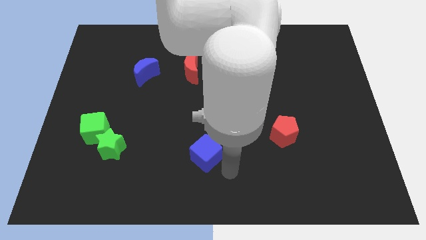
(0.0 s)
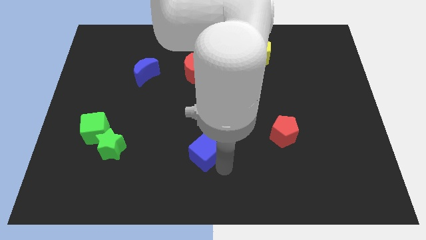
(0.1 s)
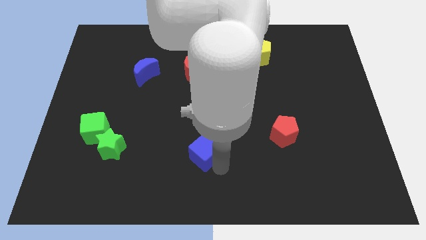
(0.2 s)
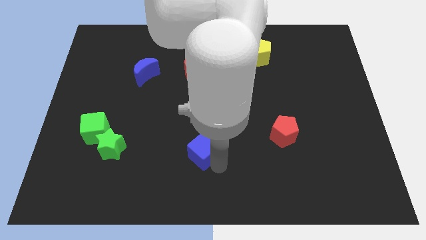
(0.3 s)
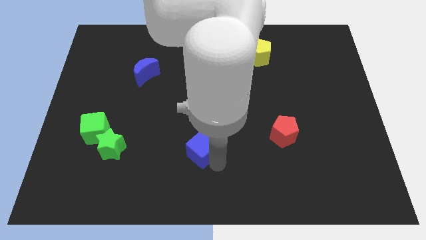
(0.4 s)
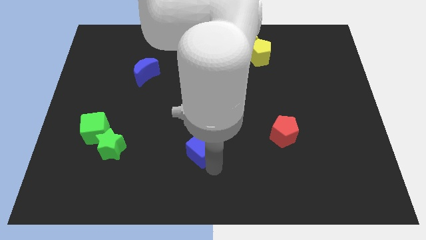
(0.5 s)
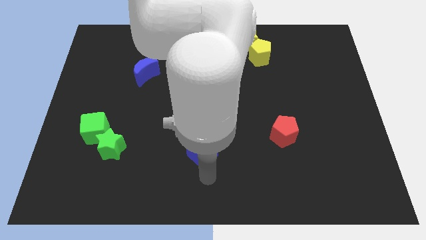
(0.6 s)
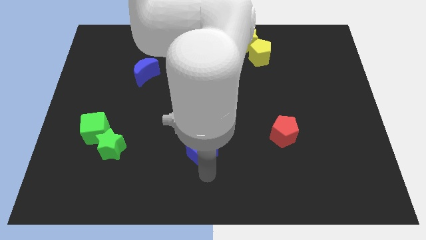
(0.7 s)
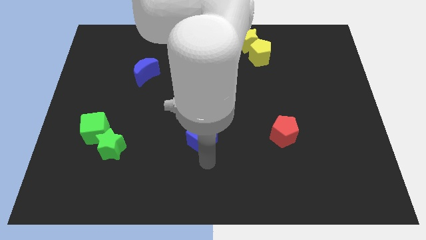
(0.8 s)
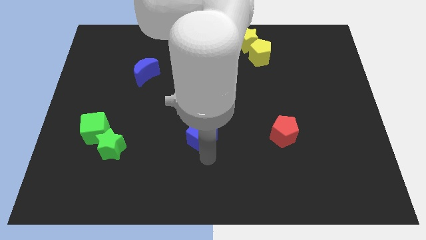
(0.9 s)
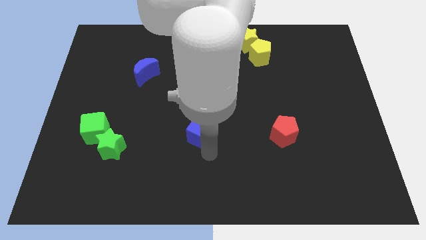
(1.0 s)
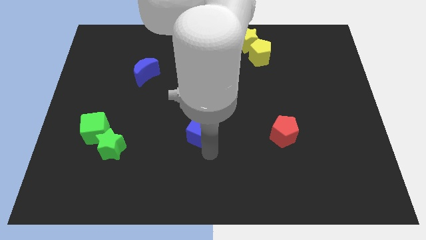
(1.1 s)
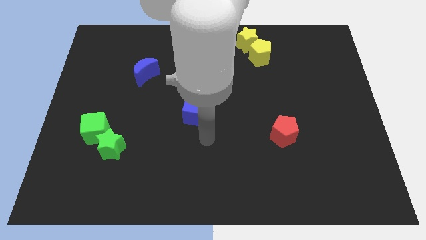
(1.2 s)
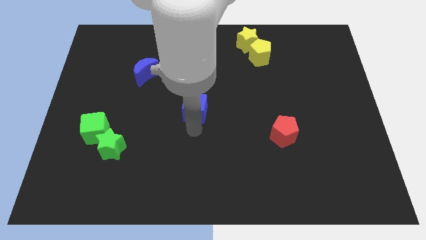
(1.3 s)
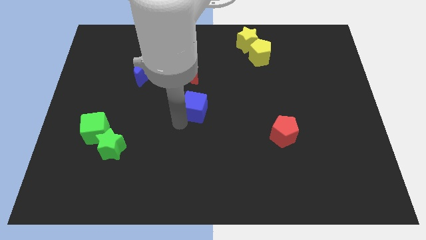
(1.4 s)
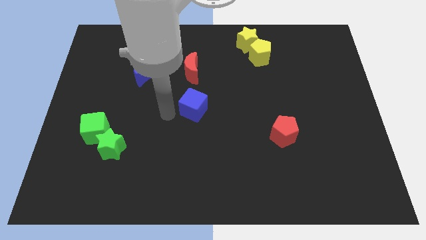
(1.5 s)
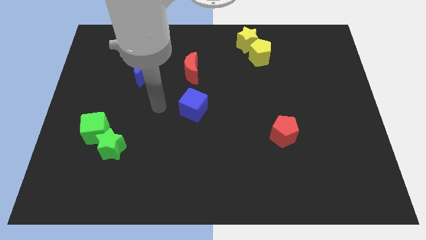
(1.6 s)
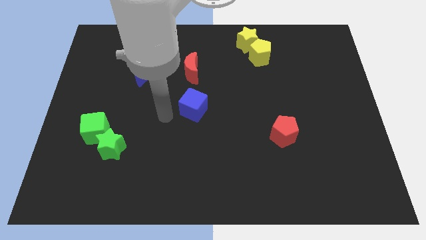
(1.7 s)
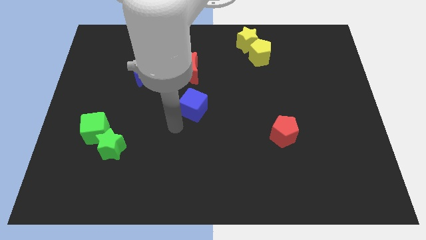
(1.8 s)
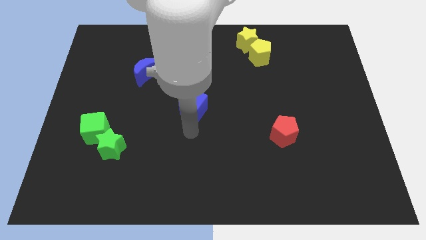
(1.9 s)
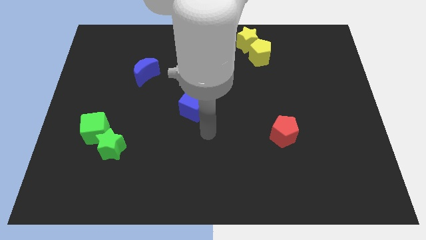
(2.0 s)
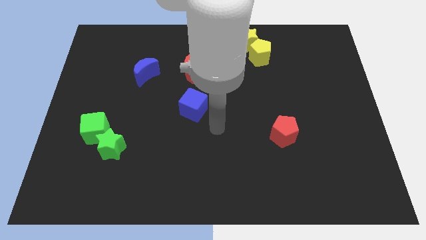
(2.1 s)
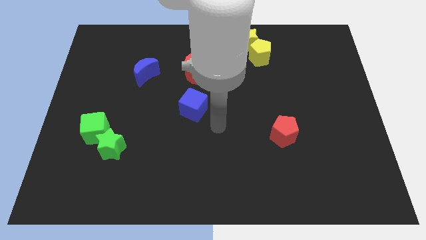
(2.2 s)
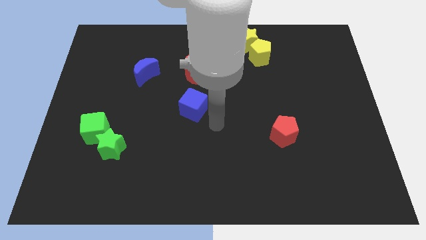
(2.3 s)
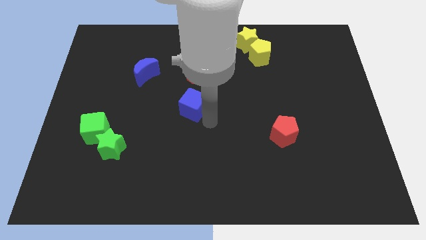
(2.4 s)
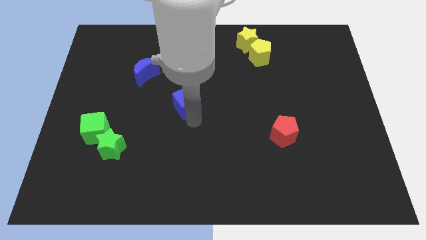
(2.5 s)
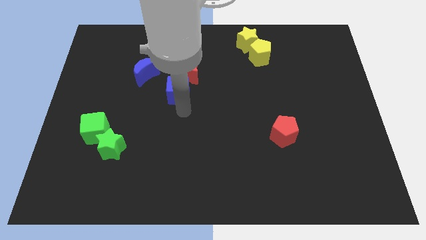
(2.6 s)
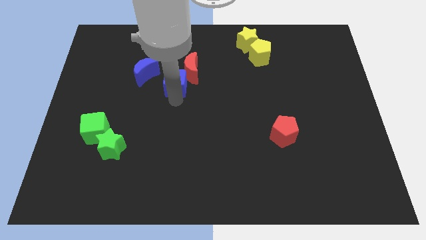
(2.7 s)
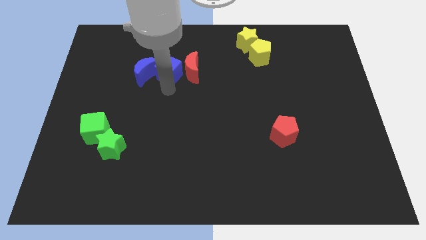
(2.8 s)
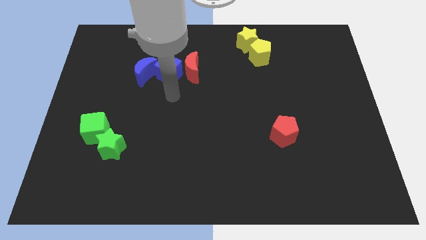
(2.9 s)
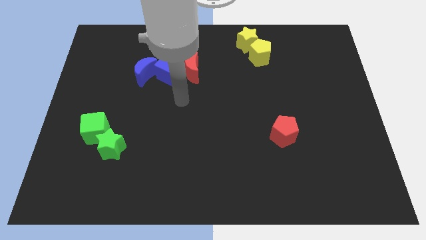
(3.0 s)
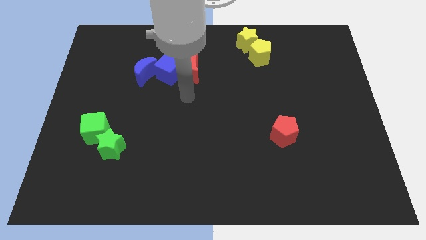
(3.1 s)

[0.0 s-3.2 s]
move the blue cube between the red crescent and blue crescent

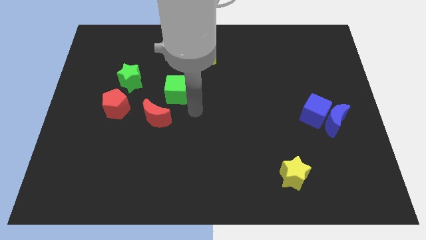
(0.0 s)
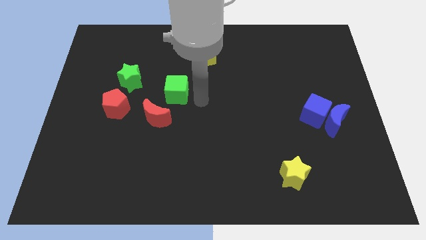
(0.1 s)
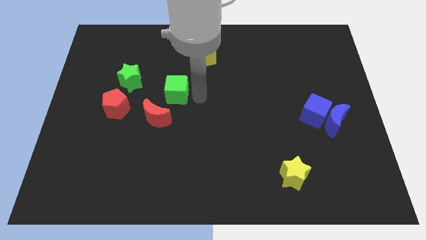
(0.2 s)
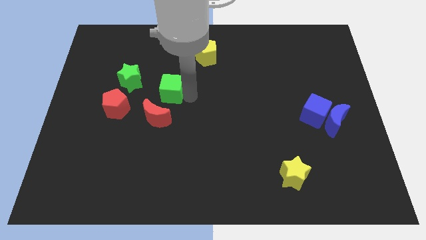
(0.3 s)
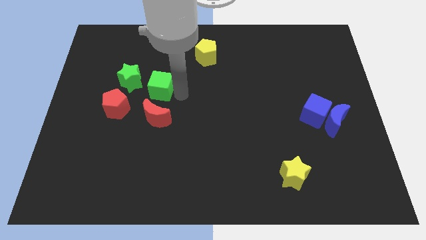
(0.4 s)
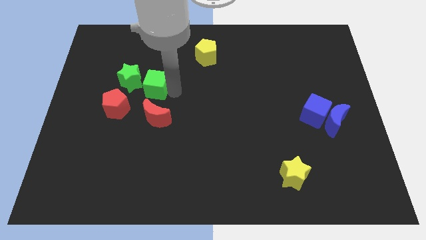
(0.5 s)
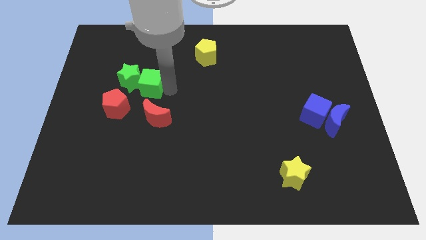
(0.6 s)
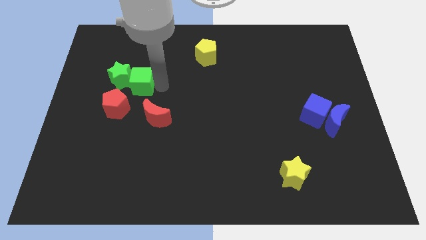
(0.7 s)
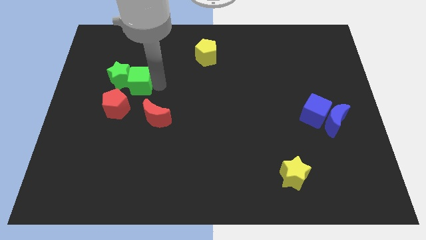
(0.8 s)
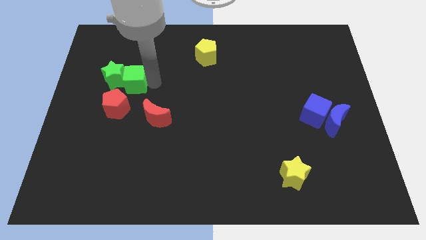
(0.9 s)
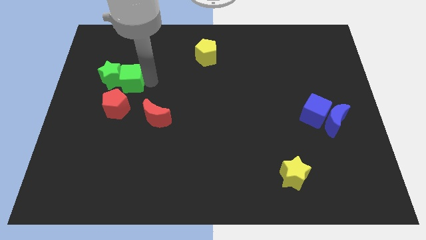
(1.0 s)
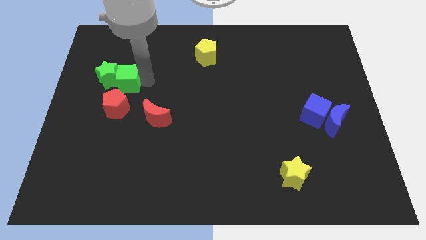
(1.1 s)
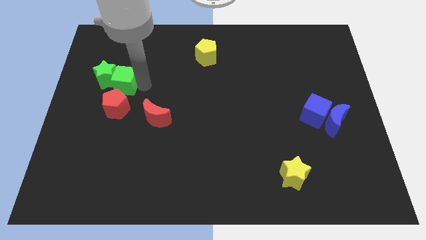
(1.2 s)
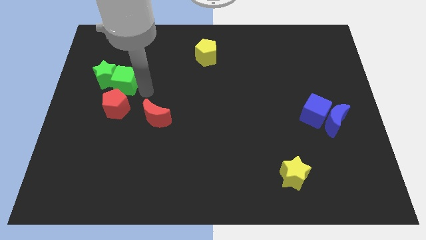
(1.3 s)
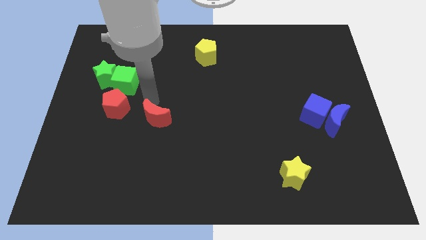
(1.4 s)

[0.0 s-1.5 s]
push the green cube into the green star towards the left

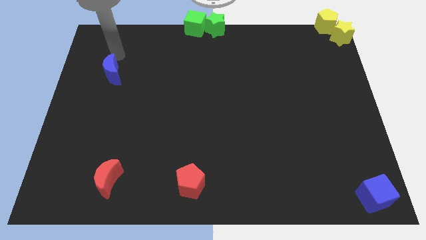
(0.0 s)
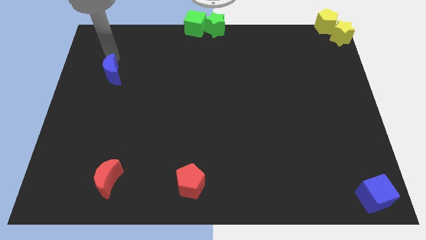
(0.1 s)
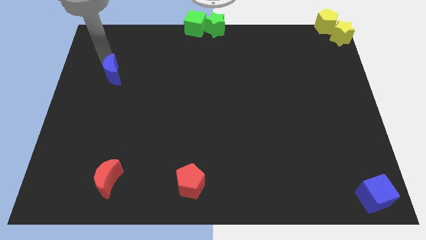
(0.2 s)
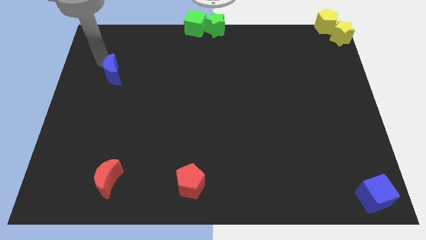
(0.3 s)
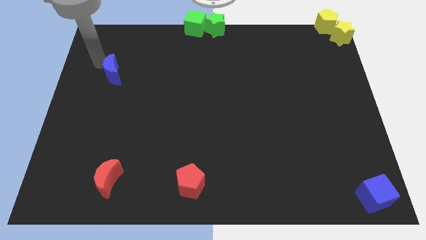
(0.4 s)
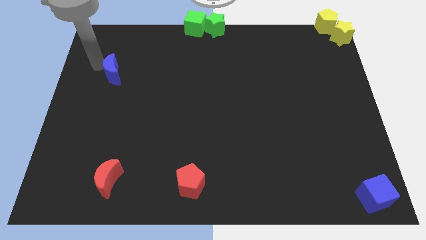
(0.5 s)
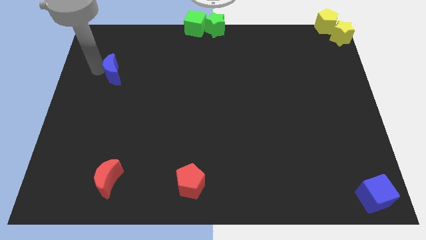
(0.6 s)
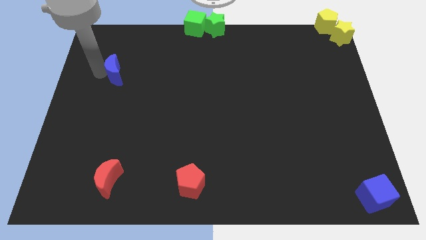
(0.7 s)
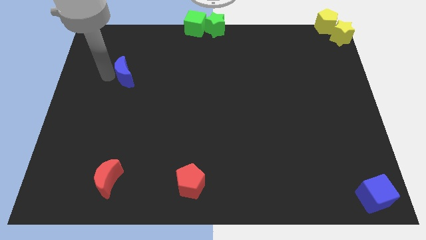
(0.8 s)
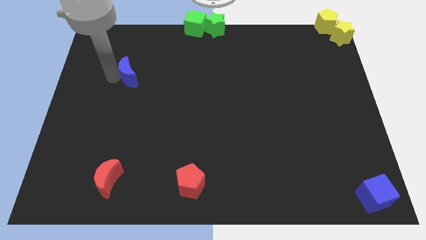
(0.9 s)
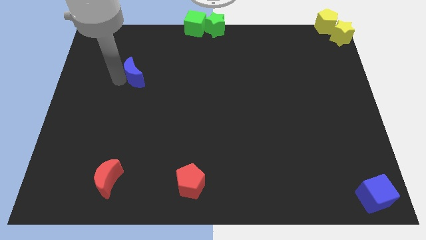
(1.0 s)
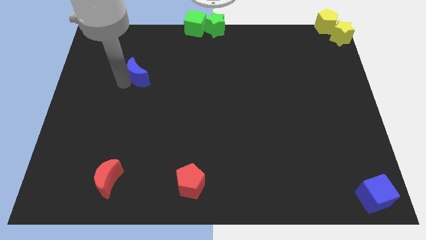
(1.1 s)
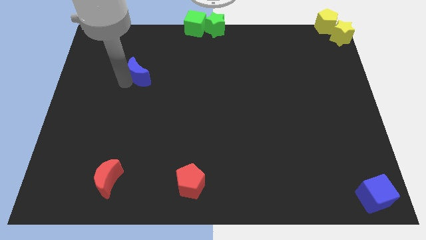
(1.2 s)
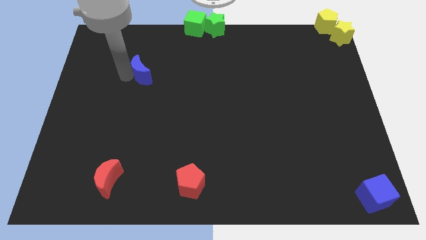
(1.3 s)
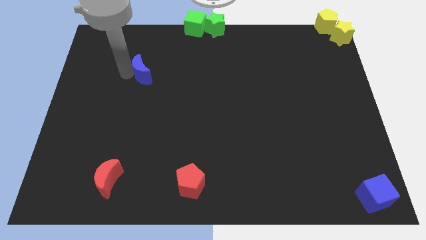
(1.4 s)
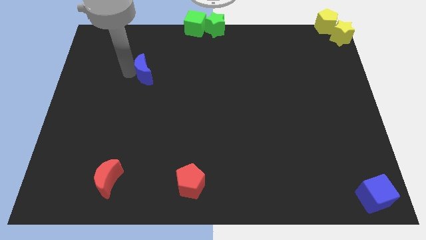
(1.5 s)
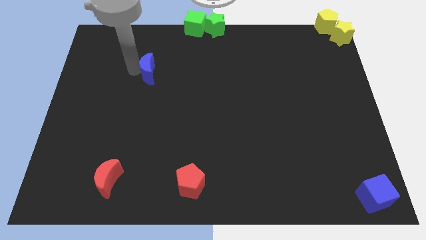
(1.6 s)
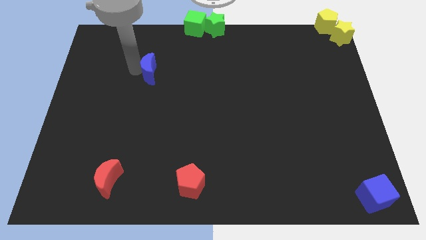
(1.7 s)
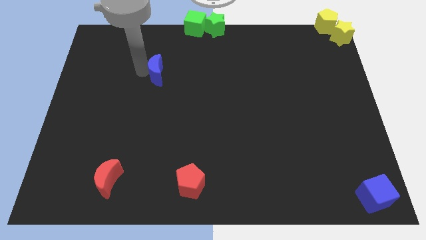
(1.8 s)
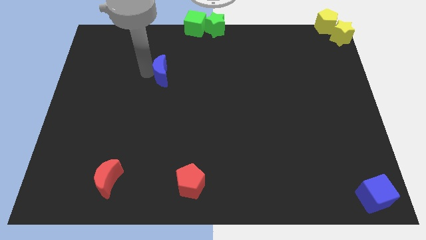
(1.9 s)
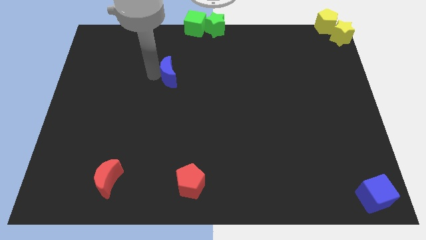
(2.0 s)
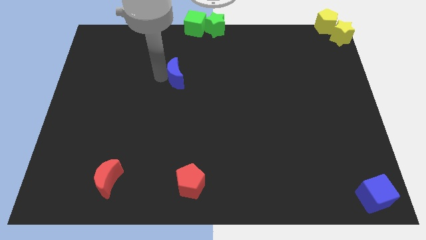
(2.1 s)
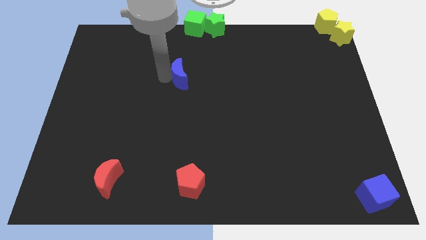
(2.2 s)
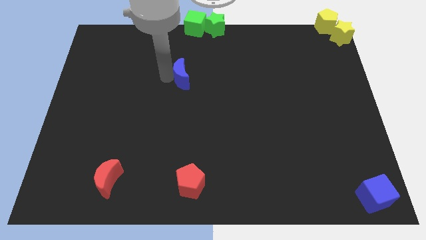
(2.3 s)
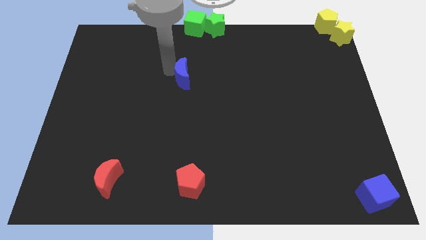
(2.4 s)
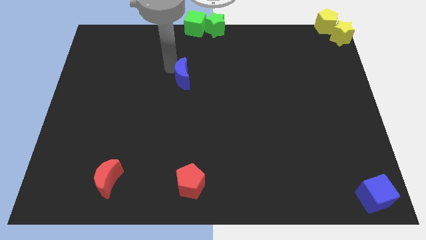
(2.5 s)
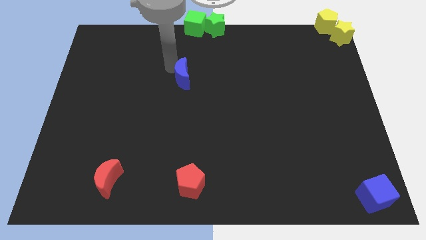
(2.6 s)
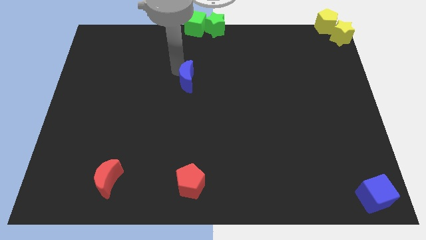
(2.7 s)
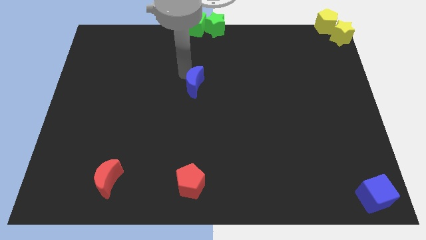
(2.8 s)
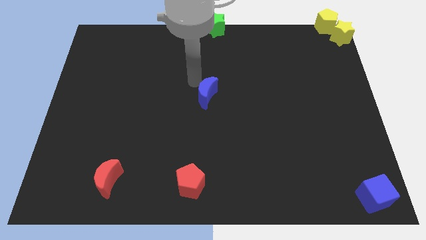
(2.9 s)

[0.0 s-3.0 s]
place the blue moon at the center of the board

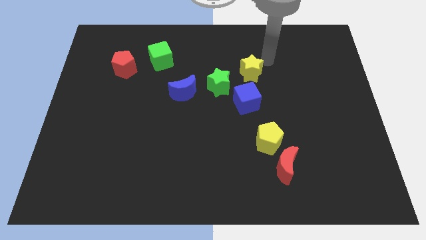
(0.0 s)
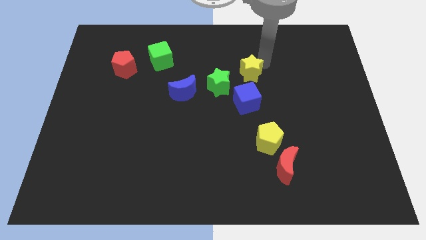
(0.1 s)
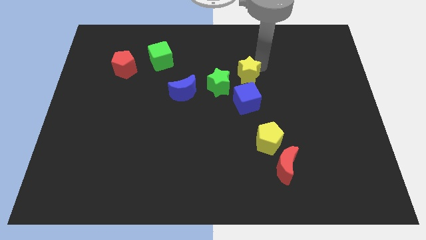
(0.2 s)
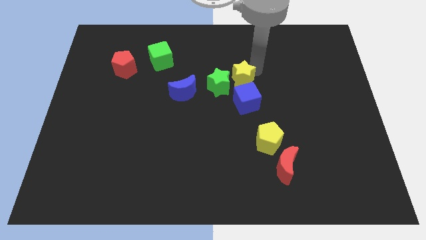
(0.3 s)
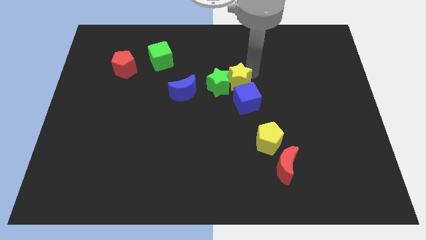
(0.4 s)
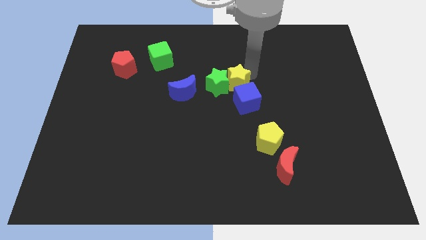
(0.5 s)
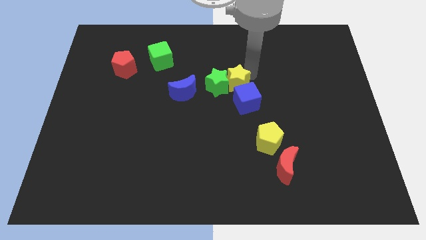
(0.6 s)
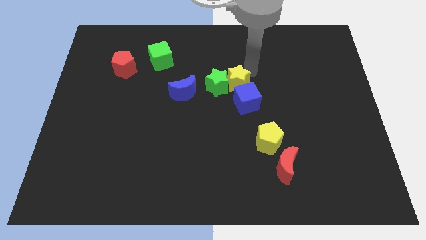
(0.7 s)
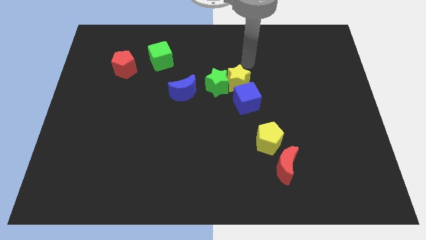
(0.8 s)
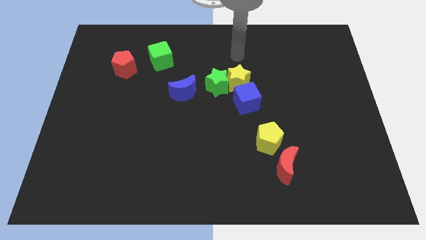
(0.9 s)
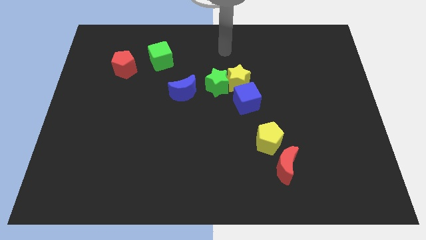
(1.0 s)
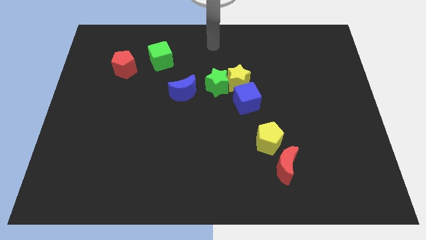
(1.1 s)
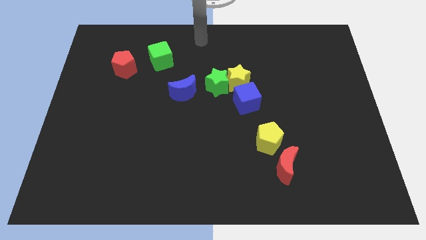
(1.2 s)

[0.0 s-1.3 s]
move the yellow star into the green star
